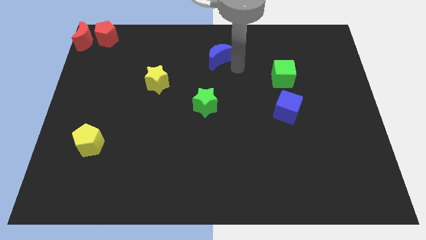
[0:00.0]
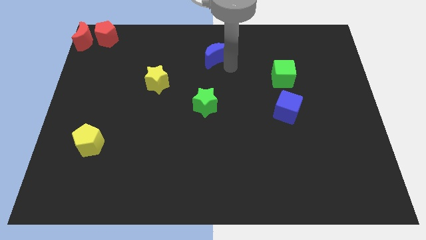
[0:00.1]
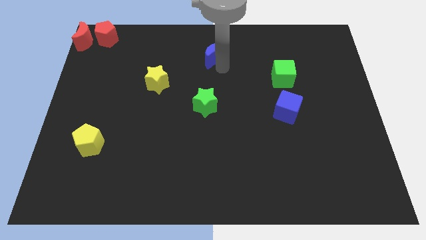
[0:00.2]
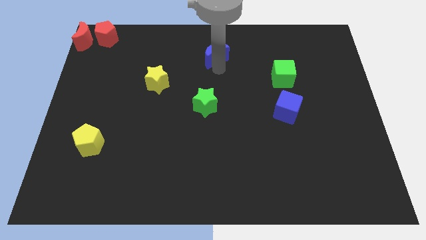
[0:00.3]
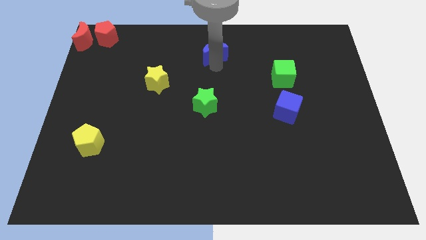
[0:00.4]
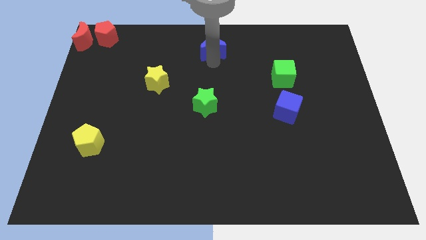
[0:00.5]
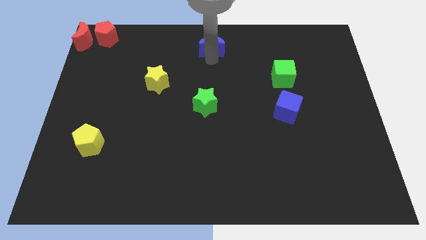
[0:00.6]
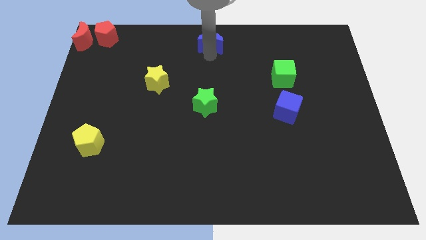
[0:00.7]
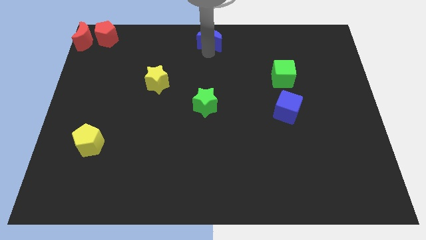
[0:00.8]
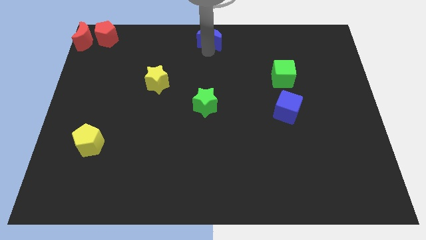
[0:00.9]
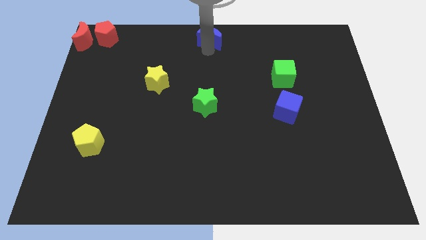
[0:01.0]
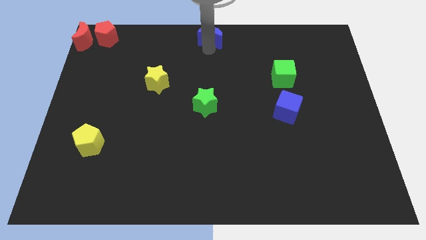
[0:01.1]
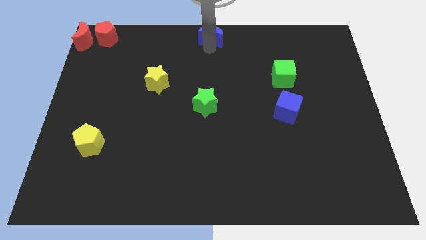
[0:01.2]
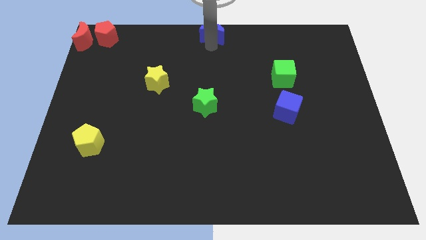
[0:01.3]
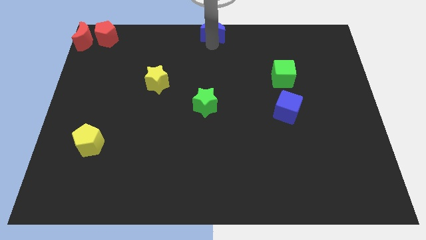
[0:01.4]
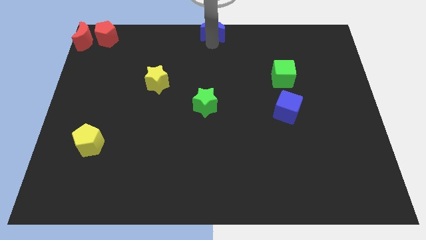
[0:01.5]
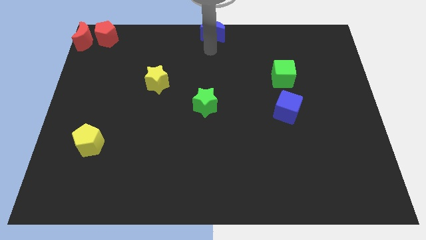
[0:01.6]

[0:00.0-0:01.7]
place the blue crescent at the top center of the board

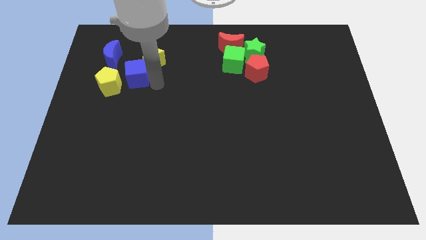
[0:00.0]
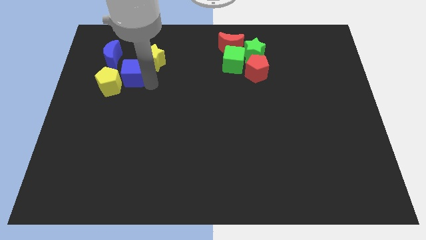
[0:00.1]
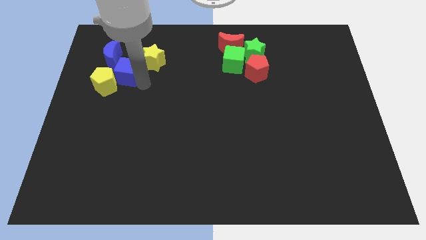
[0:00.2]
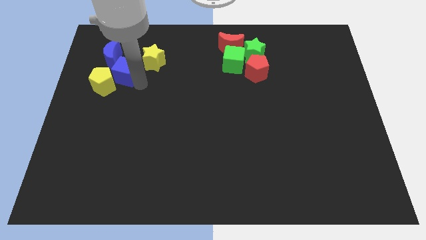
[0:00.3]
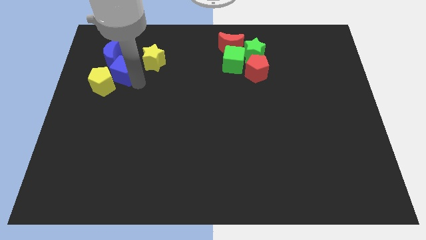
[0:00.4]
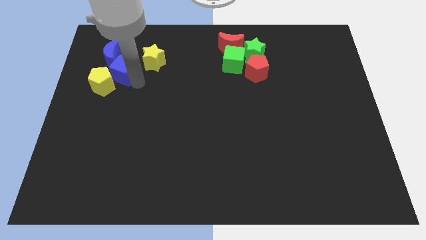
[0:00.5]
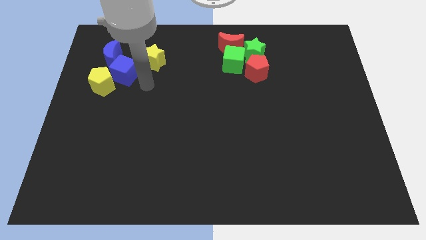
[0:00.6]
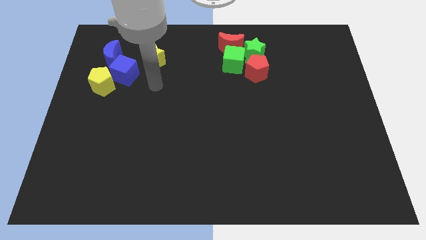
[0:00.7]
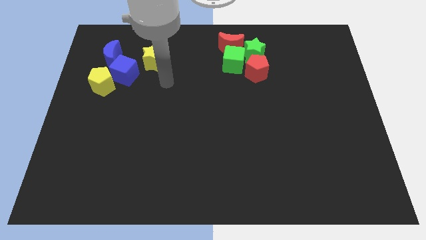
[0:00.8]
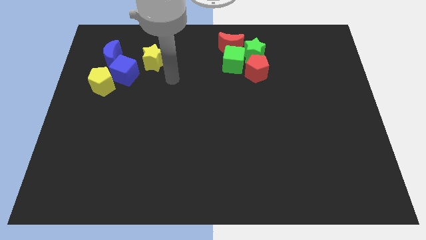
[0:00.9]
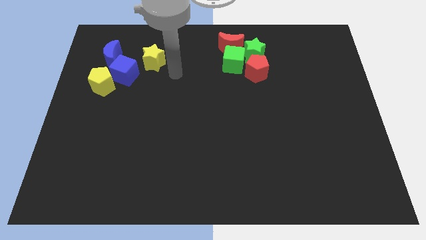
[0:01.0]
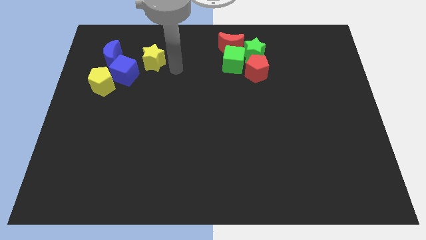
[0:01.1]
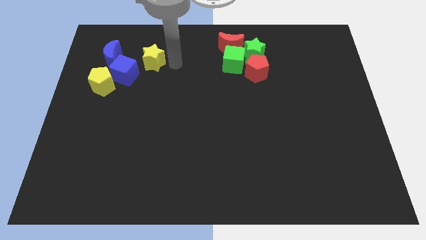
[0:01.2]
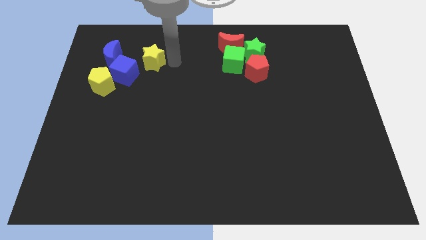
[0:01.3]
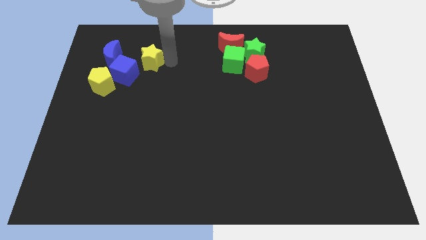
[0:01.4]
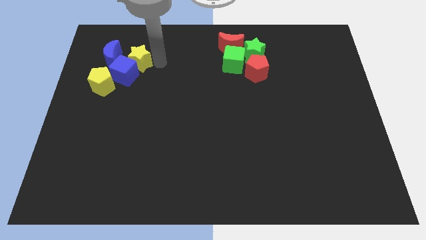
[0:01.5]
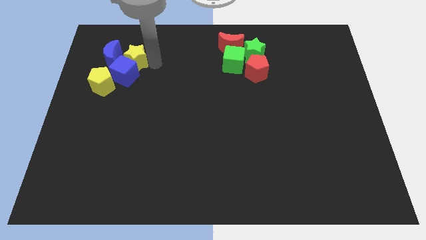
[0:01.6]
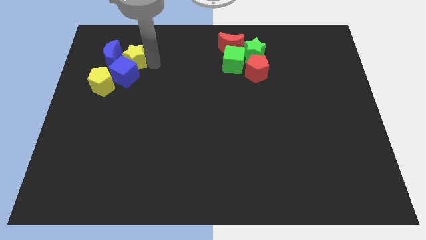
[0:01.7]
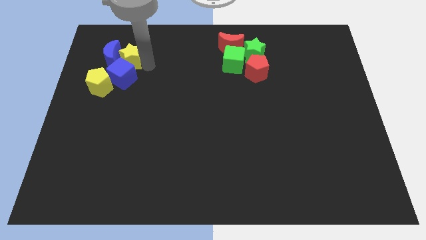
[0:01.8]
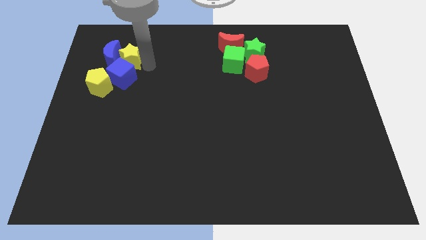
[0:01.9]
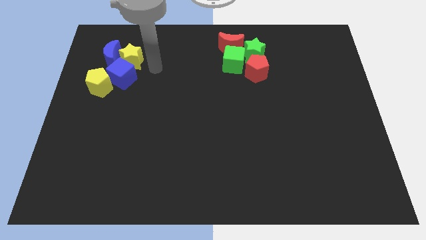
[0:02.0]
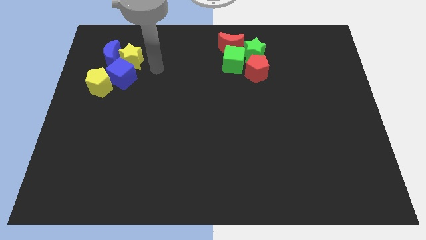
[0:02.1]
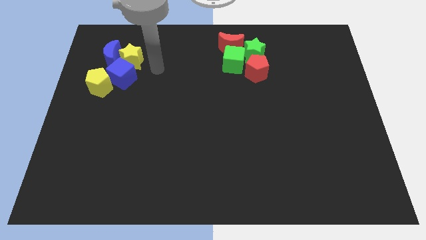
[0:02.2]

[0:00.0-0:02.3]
move the yellow star to the left

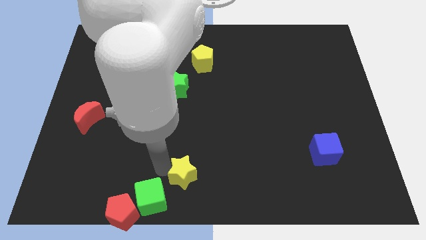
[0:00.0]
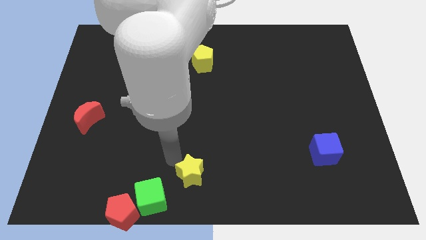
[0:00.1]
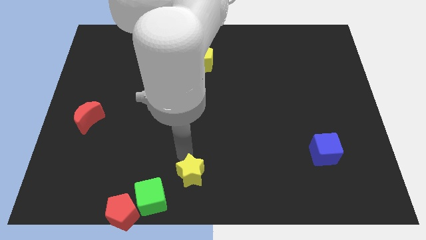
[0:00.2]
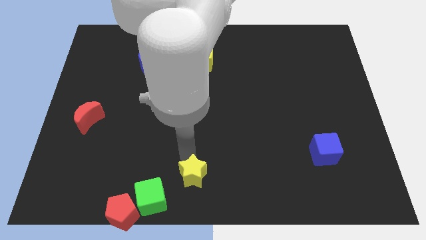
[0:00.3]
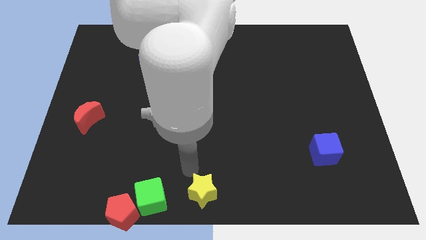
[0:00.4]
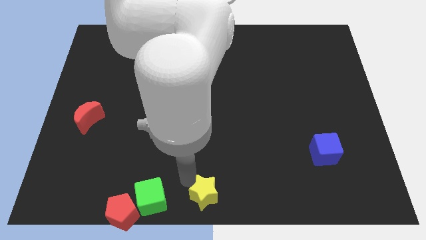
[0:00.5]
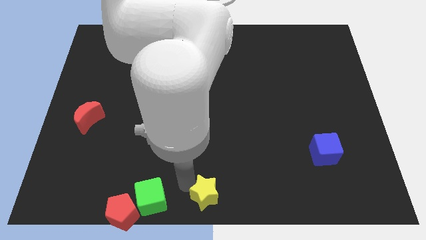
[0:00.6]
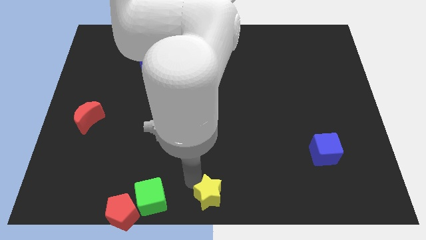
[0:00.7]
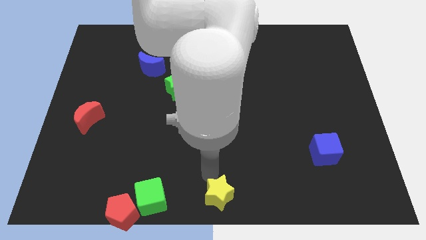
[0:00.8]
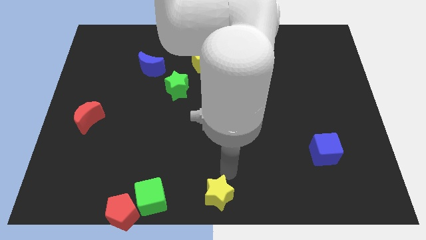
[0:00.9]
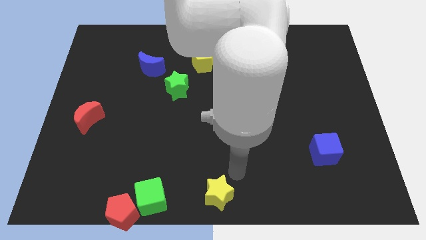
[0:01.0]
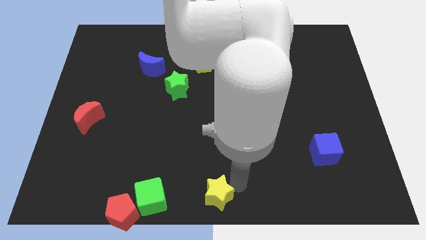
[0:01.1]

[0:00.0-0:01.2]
push the yellow star to the bottom center of the board

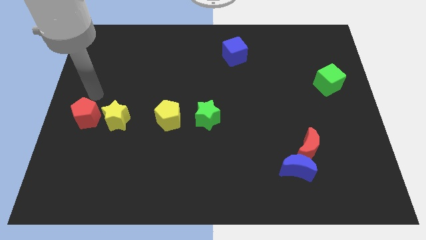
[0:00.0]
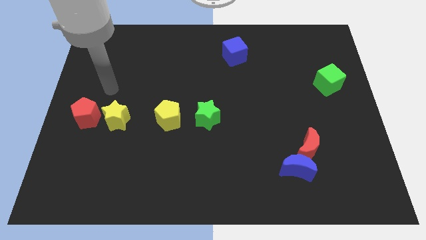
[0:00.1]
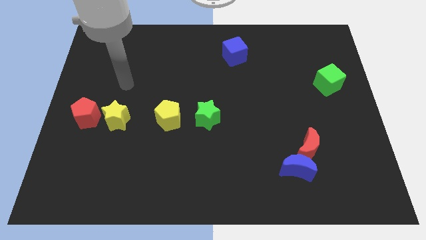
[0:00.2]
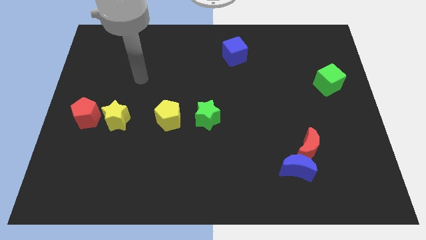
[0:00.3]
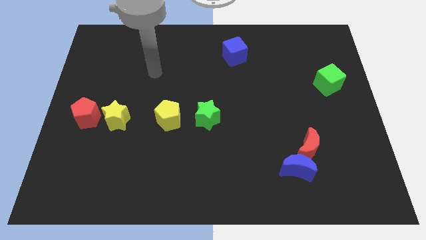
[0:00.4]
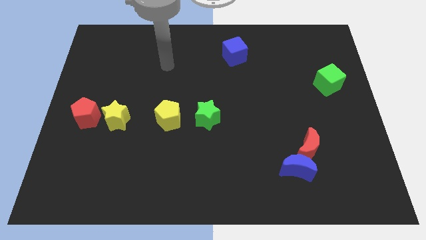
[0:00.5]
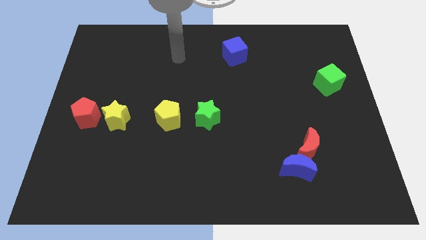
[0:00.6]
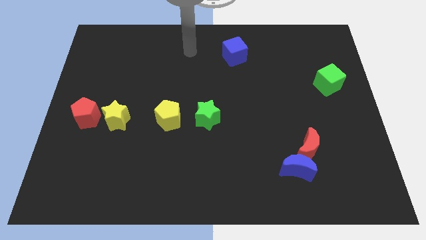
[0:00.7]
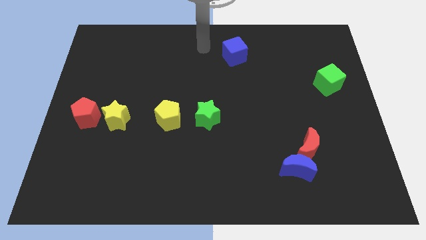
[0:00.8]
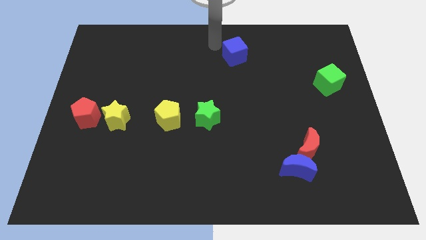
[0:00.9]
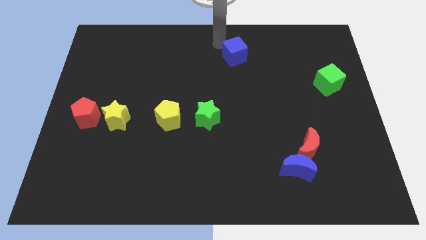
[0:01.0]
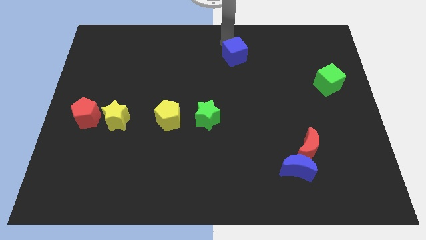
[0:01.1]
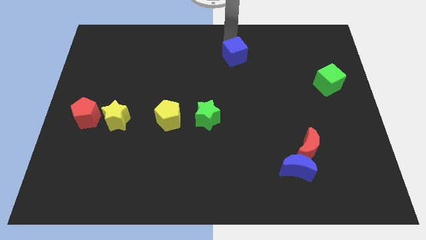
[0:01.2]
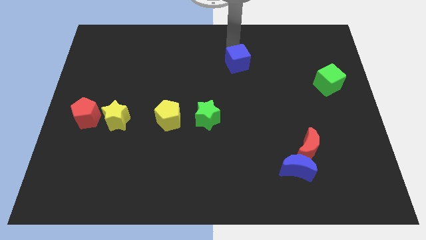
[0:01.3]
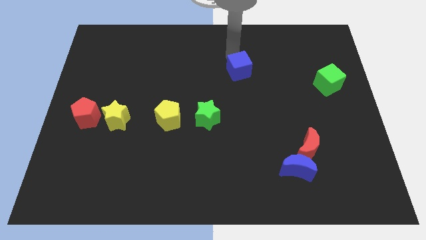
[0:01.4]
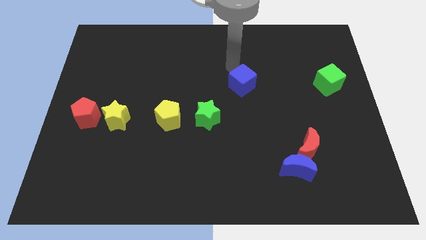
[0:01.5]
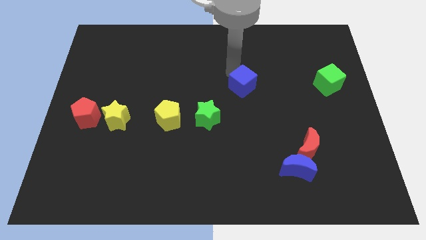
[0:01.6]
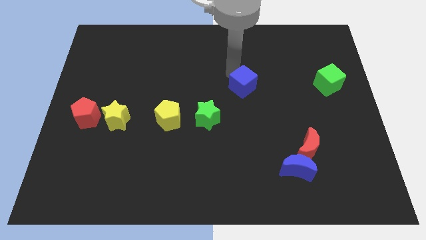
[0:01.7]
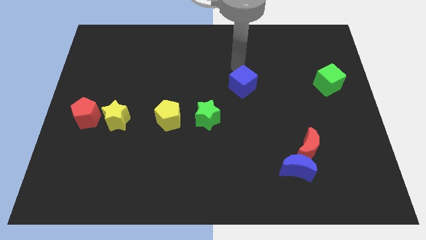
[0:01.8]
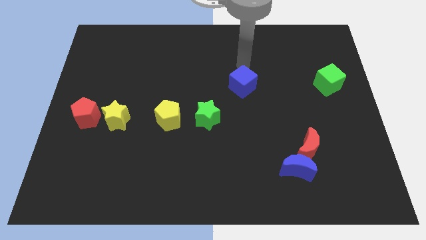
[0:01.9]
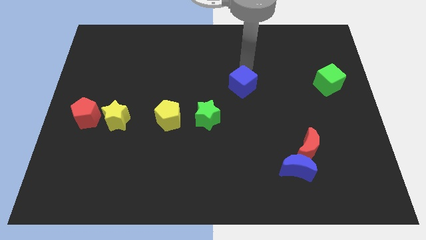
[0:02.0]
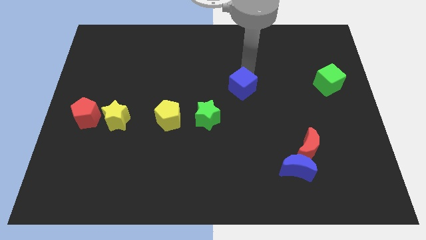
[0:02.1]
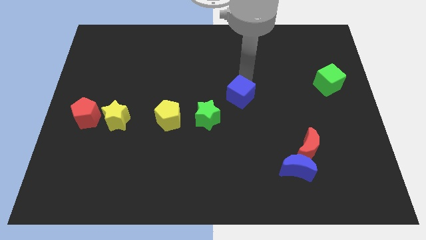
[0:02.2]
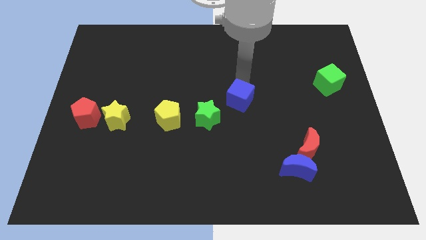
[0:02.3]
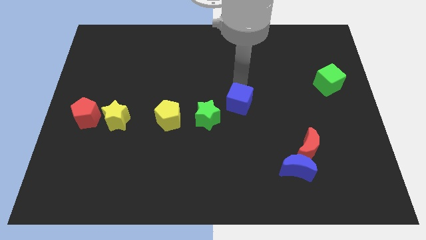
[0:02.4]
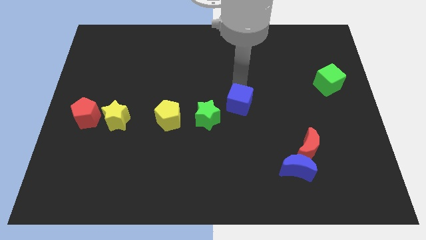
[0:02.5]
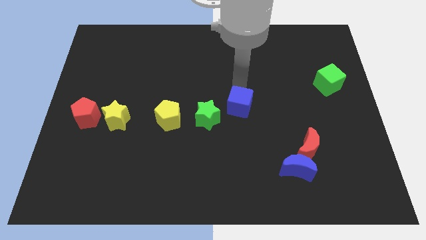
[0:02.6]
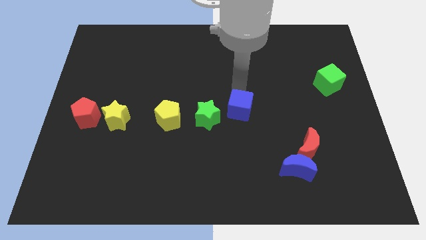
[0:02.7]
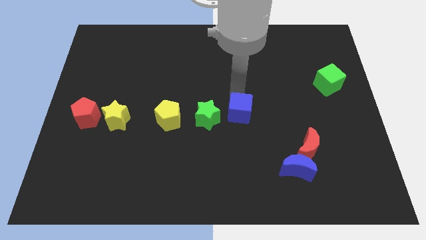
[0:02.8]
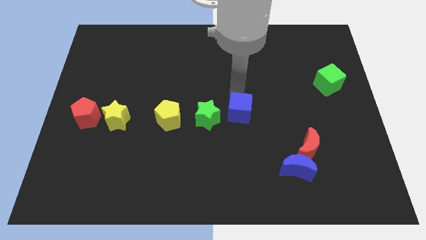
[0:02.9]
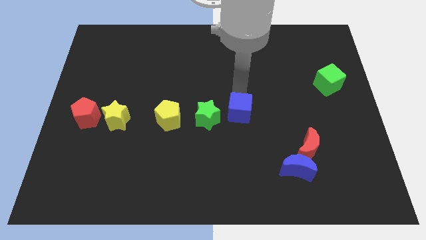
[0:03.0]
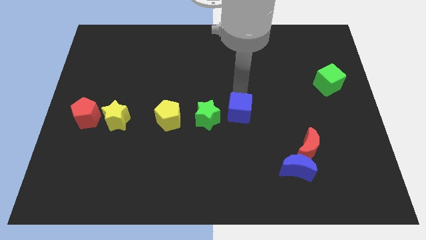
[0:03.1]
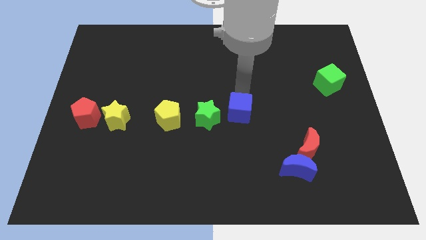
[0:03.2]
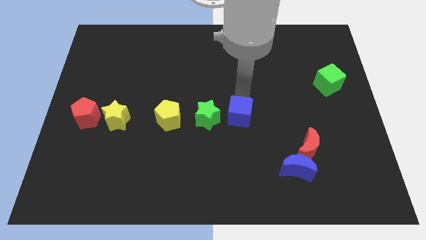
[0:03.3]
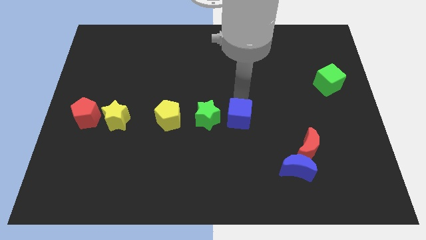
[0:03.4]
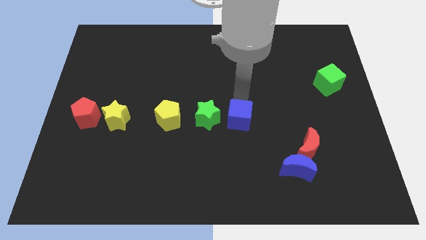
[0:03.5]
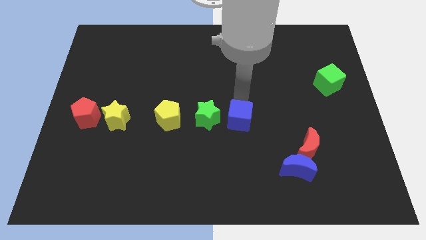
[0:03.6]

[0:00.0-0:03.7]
place blue cube on right to green star
